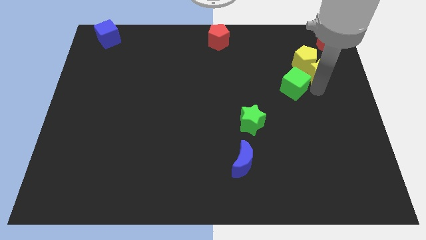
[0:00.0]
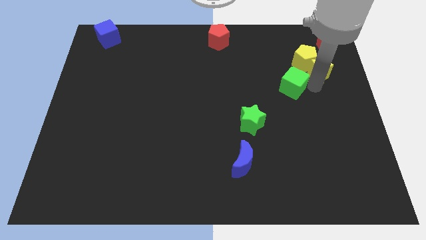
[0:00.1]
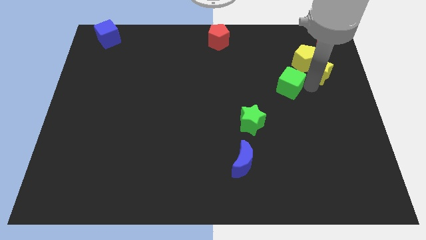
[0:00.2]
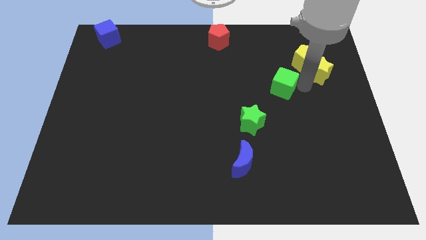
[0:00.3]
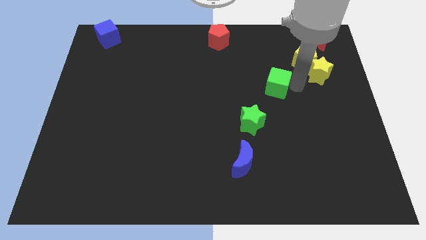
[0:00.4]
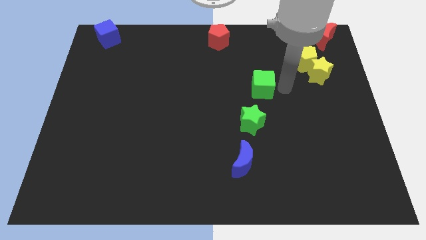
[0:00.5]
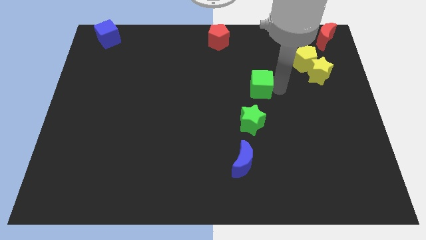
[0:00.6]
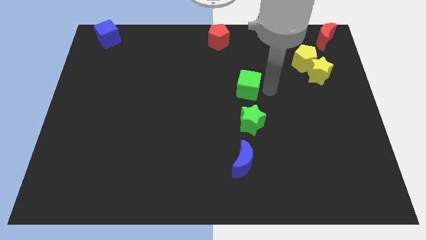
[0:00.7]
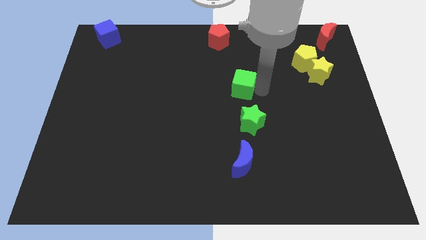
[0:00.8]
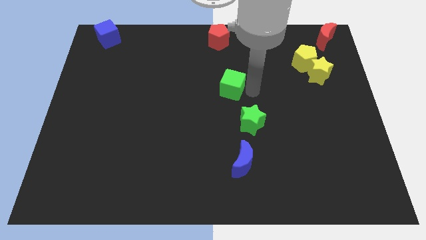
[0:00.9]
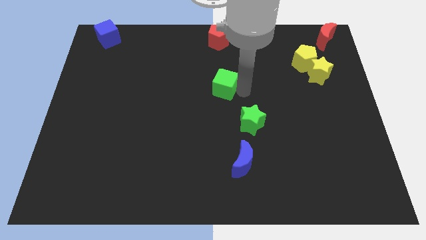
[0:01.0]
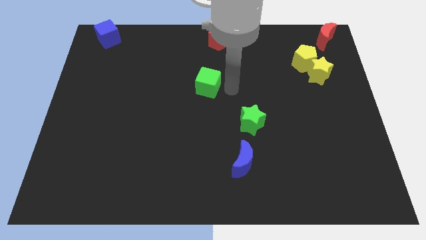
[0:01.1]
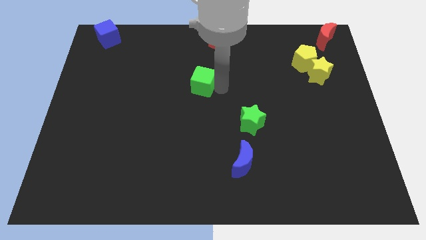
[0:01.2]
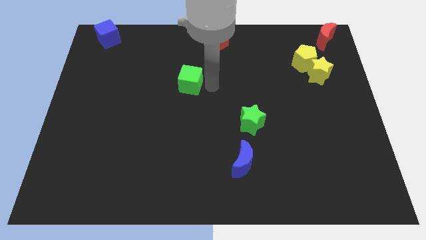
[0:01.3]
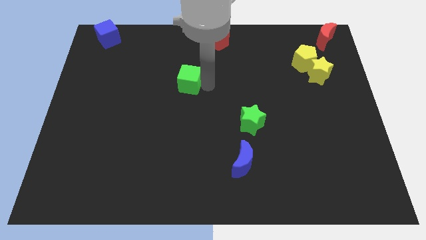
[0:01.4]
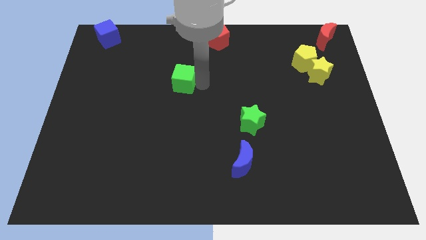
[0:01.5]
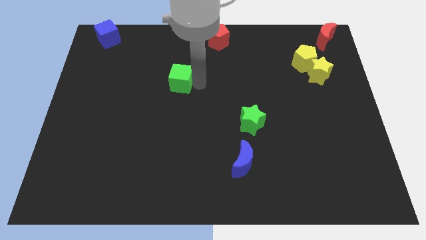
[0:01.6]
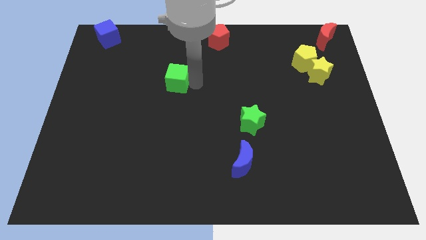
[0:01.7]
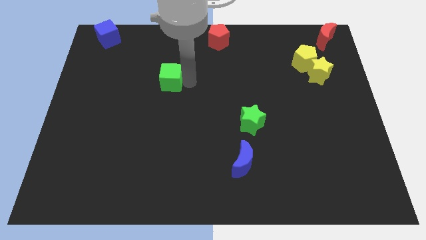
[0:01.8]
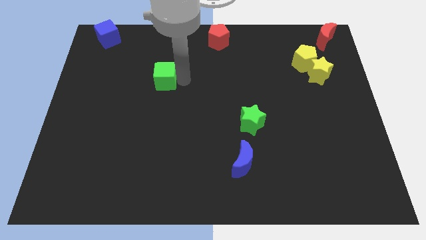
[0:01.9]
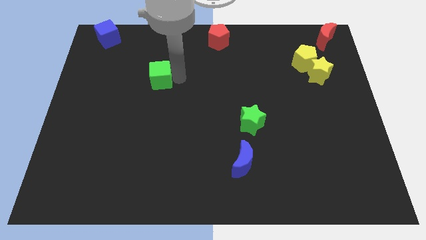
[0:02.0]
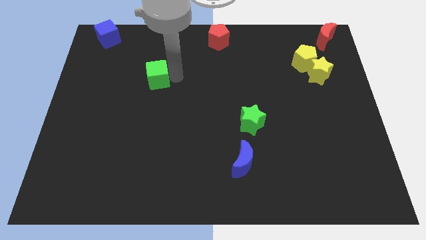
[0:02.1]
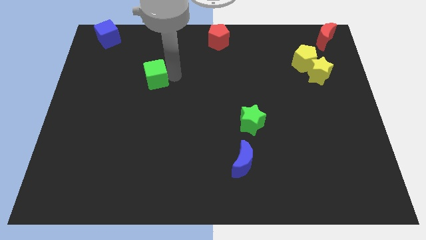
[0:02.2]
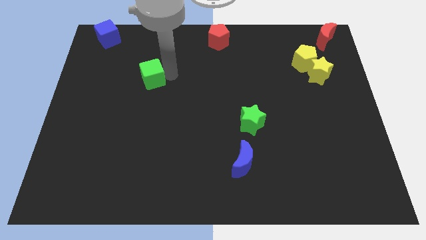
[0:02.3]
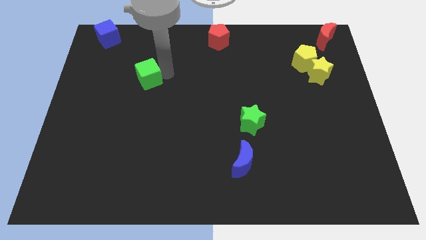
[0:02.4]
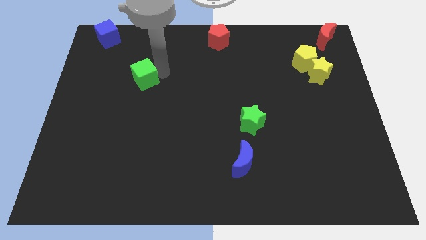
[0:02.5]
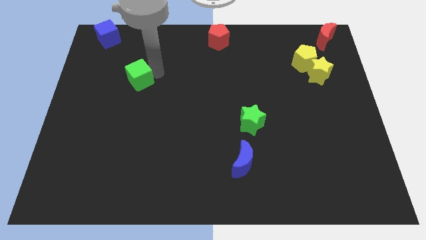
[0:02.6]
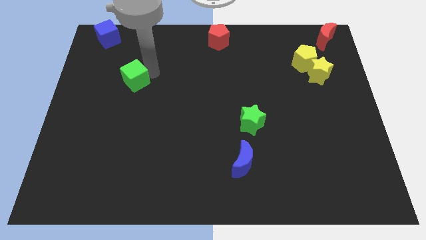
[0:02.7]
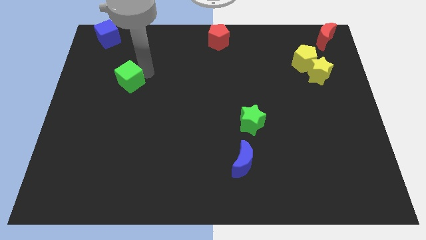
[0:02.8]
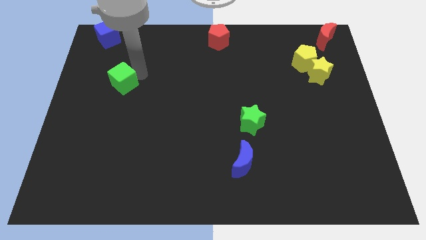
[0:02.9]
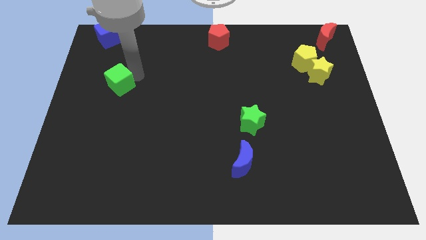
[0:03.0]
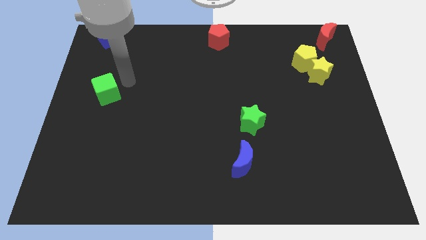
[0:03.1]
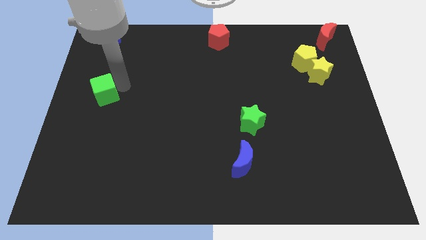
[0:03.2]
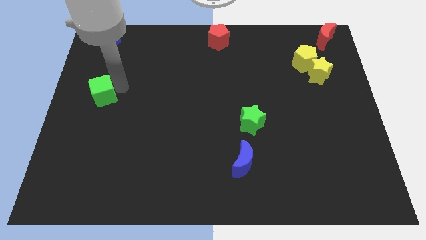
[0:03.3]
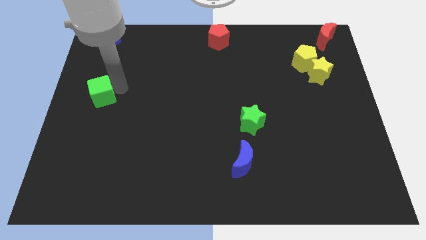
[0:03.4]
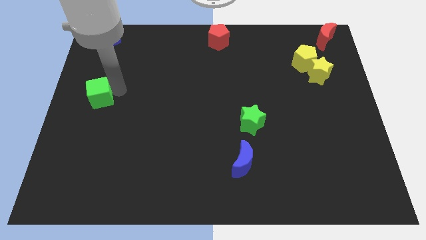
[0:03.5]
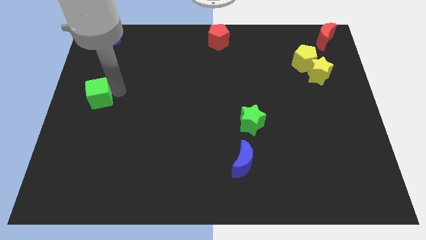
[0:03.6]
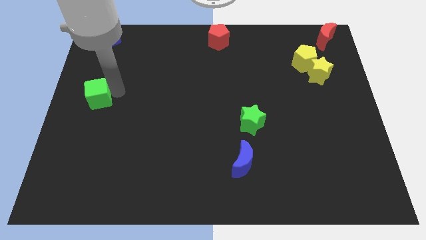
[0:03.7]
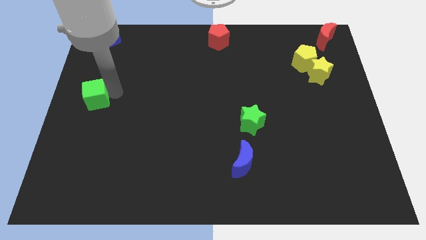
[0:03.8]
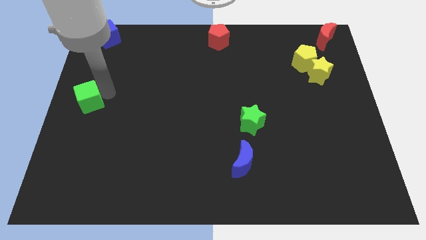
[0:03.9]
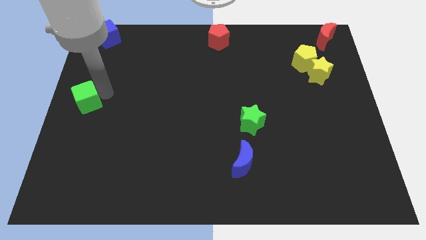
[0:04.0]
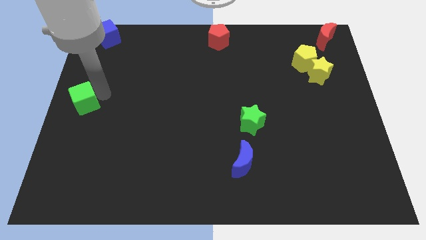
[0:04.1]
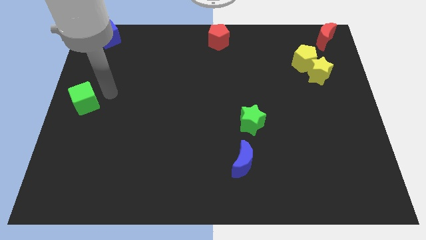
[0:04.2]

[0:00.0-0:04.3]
push the green cube to the center left

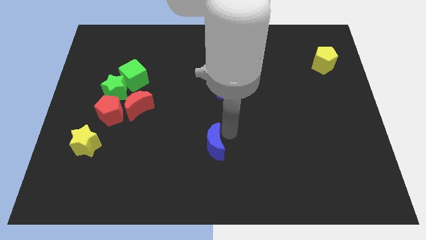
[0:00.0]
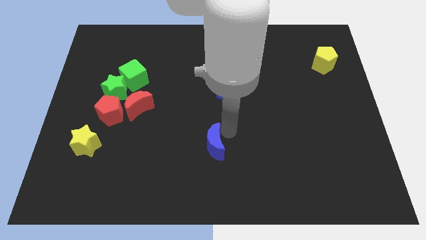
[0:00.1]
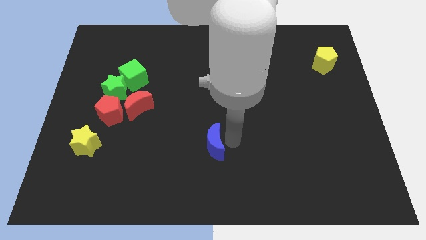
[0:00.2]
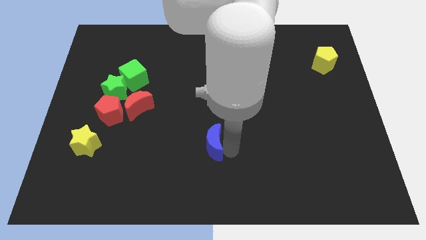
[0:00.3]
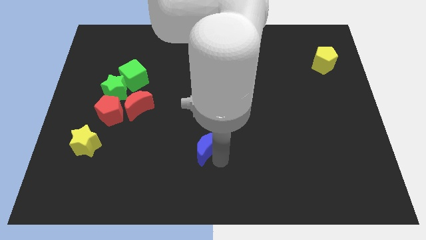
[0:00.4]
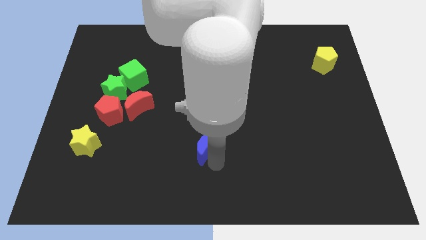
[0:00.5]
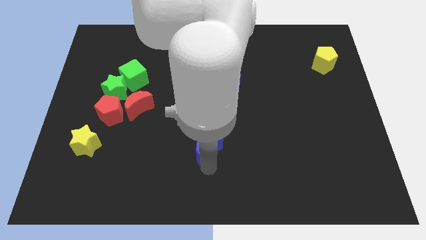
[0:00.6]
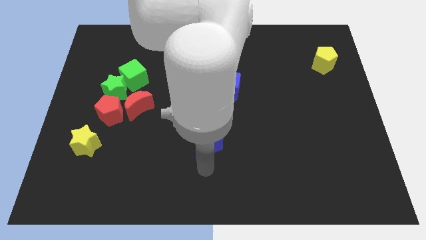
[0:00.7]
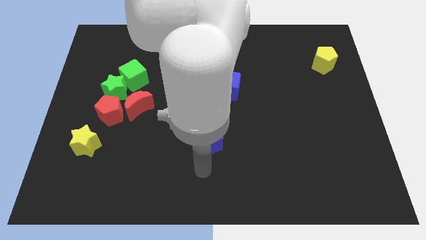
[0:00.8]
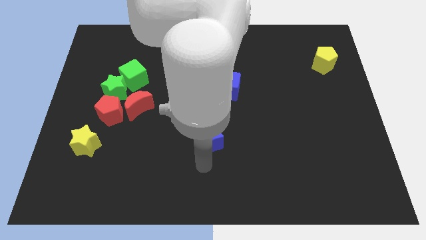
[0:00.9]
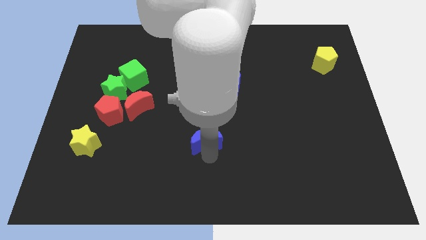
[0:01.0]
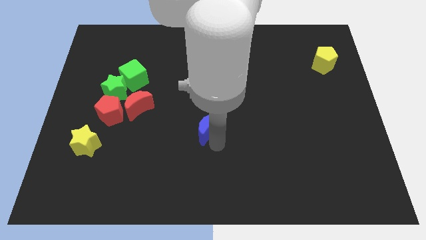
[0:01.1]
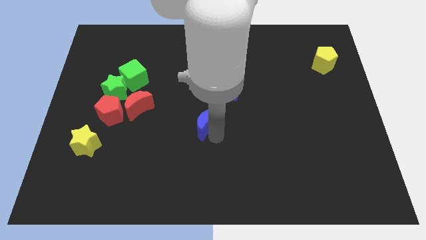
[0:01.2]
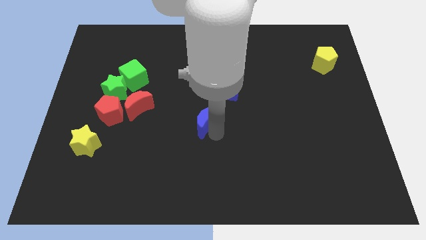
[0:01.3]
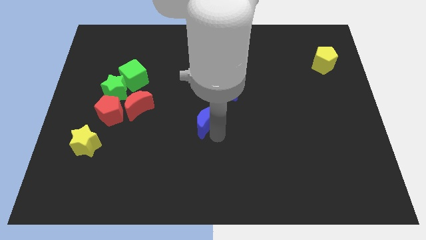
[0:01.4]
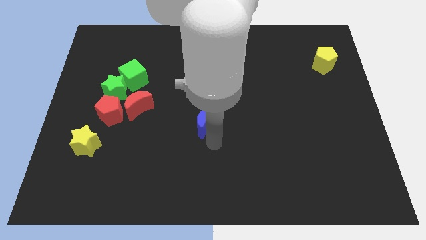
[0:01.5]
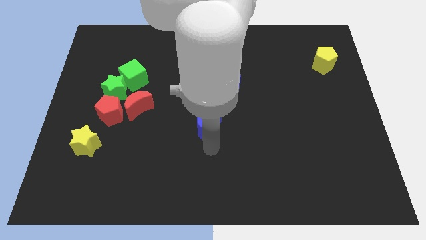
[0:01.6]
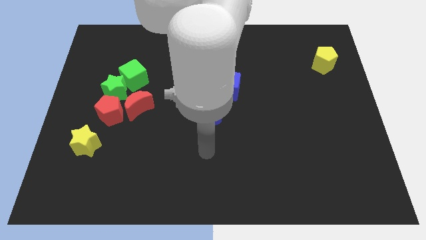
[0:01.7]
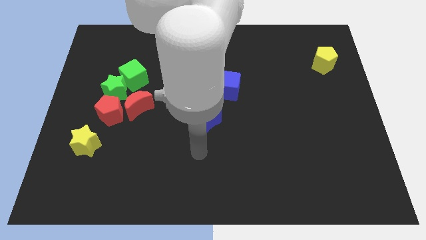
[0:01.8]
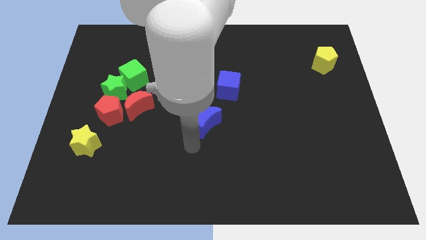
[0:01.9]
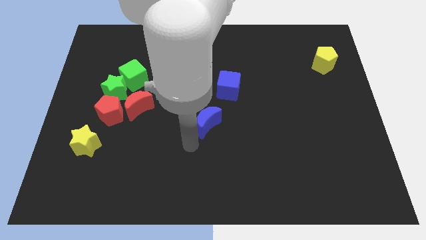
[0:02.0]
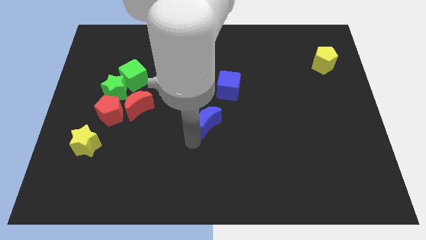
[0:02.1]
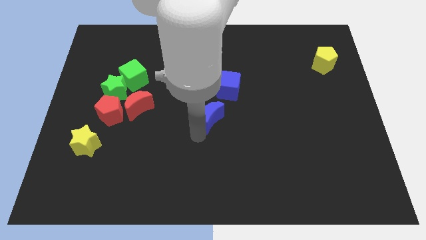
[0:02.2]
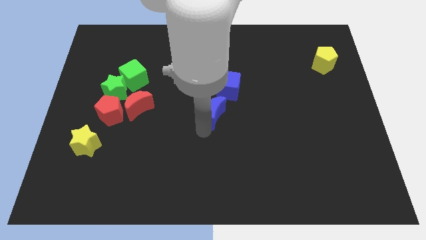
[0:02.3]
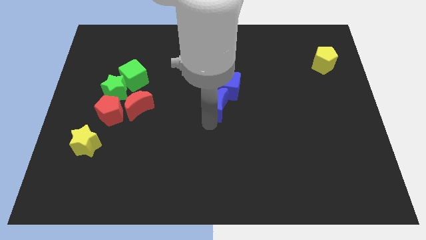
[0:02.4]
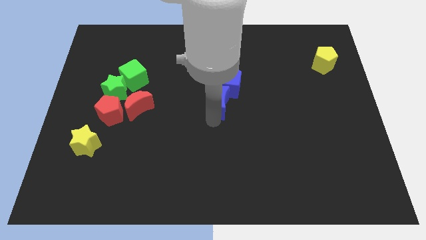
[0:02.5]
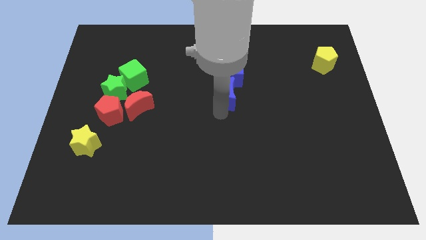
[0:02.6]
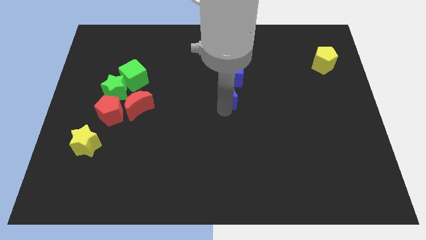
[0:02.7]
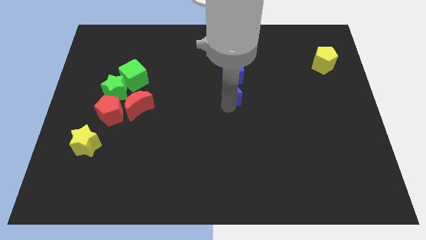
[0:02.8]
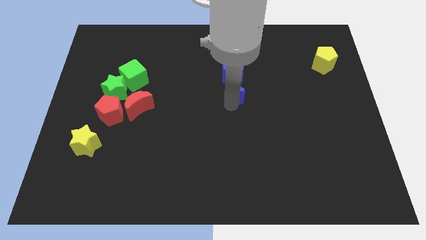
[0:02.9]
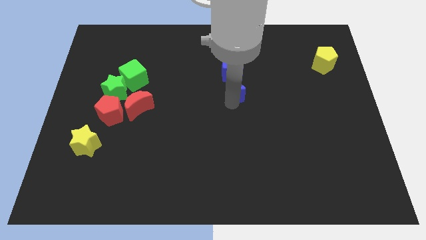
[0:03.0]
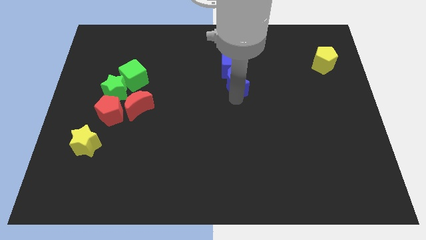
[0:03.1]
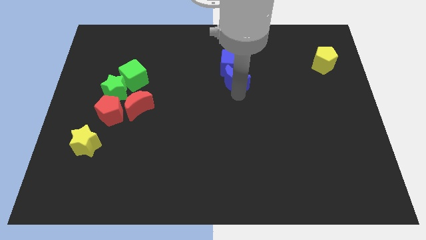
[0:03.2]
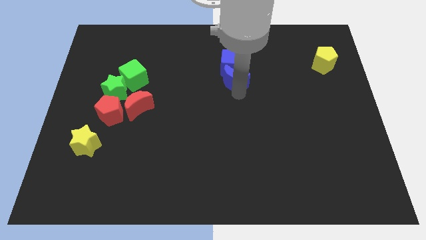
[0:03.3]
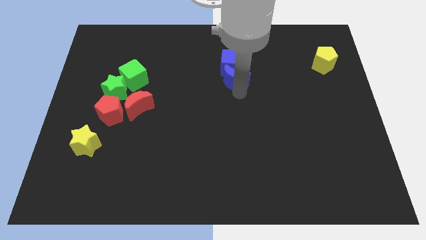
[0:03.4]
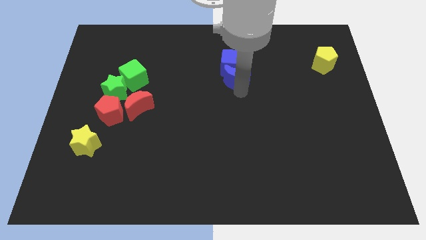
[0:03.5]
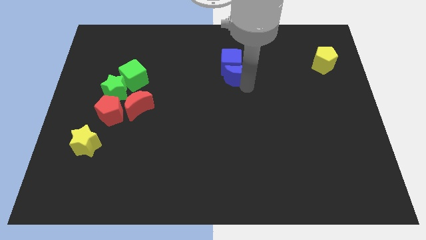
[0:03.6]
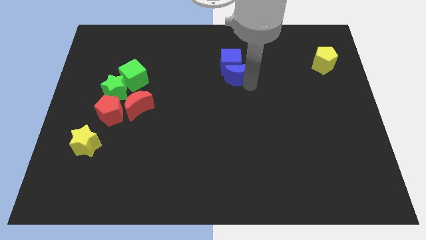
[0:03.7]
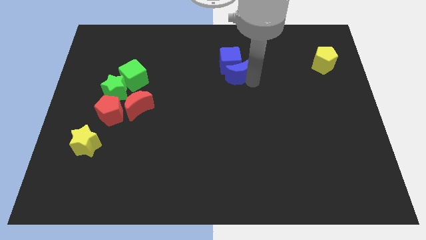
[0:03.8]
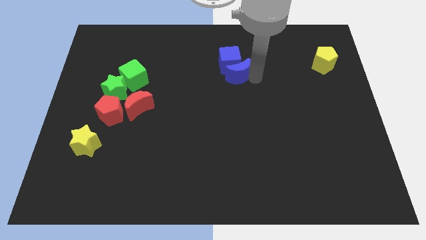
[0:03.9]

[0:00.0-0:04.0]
push the blue crescent into the bottom side of the blue cube

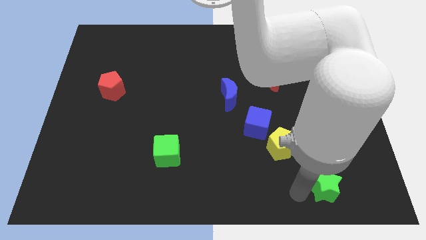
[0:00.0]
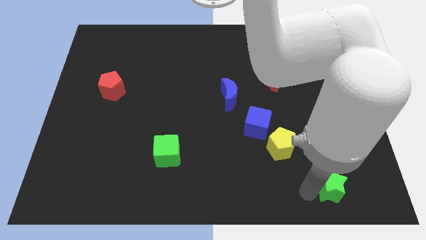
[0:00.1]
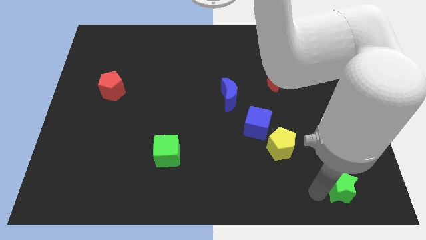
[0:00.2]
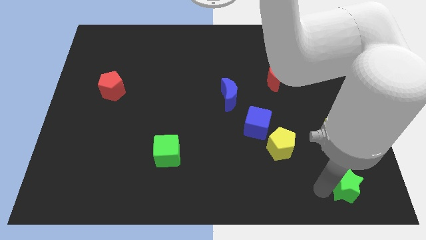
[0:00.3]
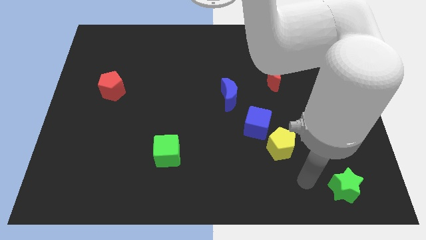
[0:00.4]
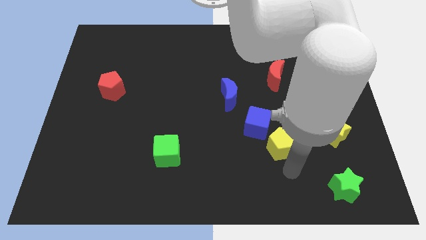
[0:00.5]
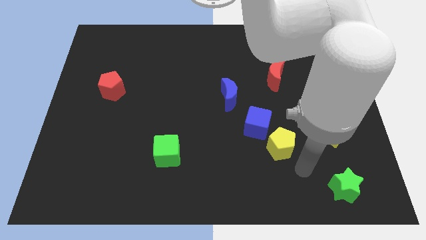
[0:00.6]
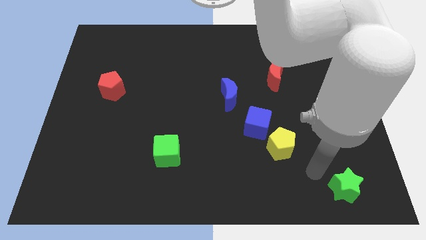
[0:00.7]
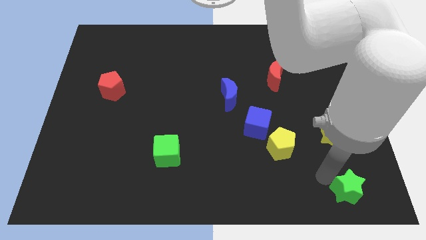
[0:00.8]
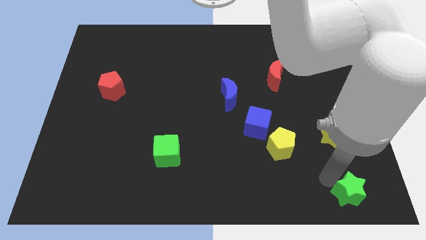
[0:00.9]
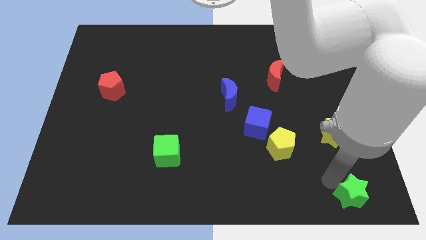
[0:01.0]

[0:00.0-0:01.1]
move green star to bottom right
